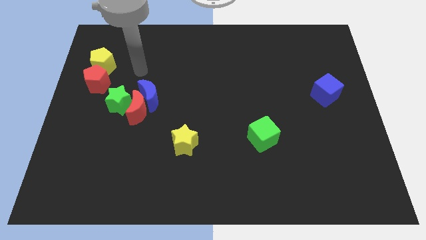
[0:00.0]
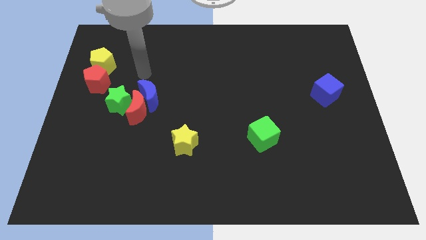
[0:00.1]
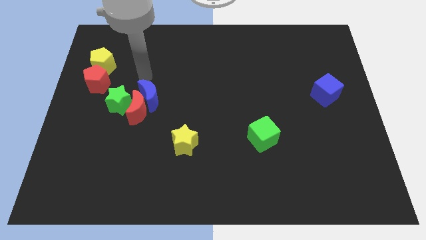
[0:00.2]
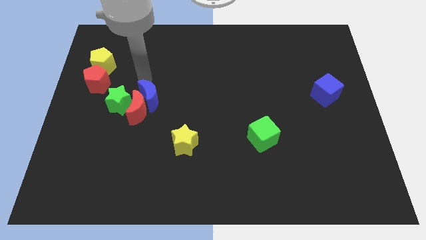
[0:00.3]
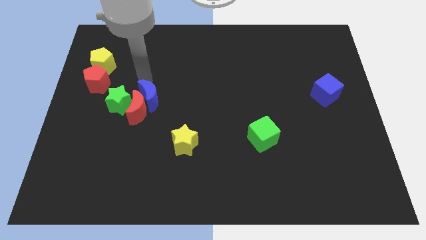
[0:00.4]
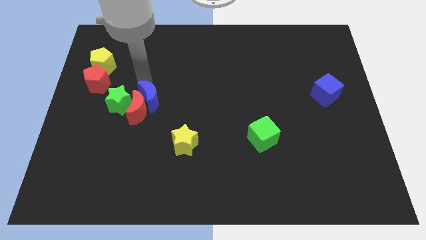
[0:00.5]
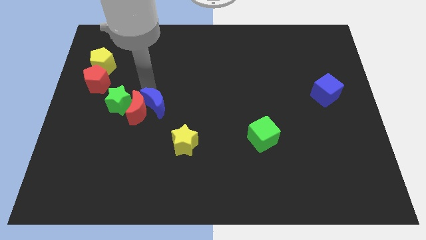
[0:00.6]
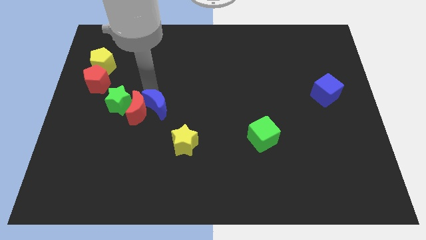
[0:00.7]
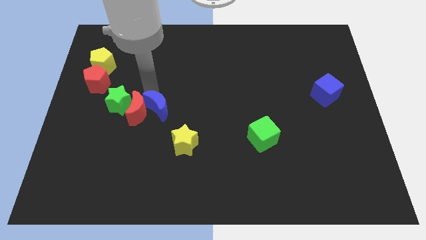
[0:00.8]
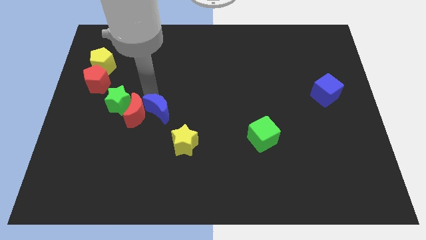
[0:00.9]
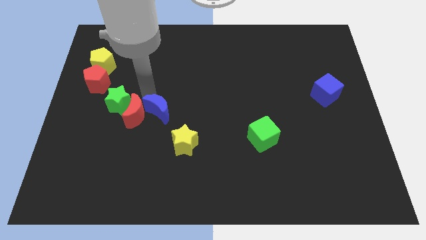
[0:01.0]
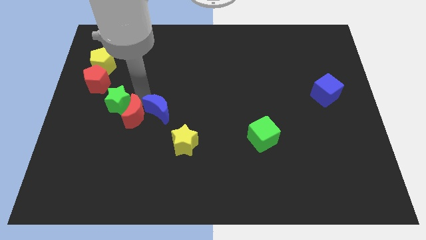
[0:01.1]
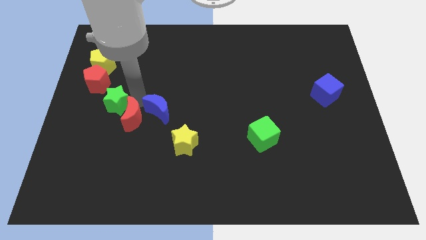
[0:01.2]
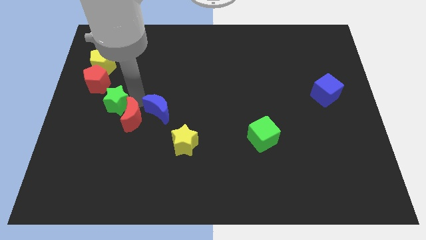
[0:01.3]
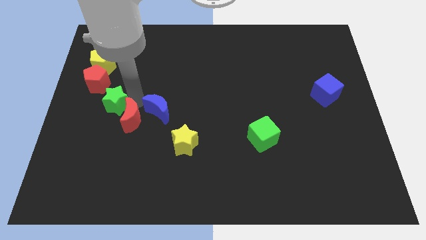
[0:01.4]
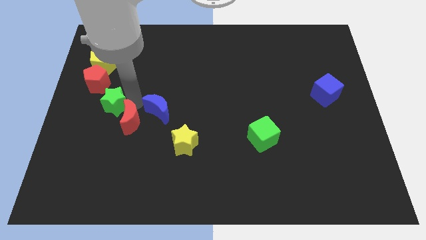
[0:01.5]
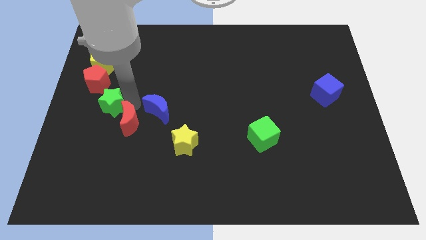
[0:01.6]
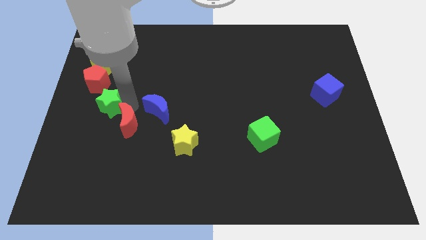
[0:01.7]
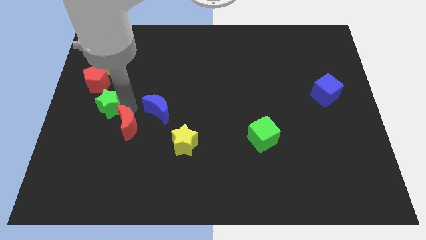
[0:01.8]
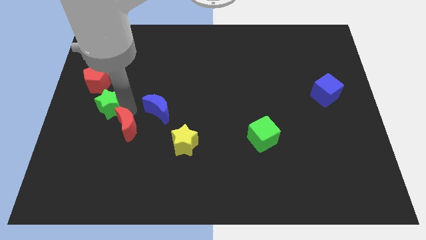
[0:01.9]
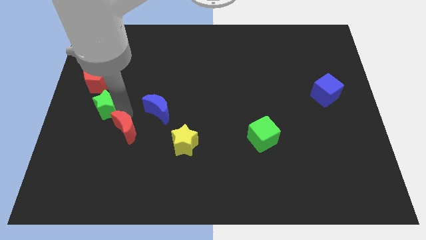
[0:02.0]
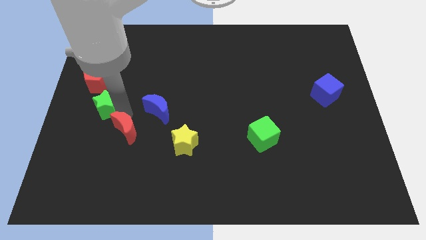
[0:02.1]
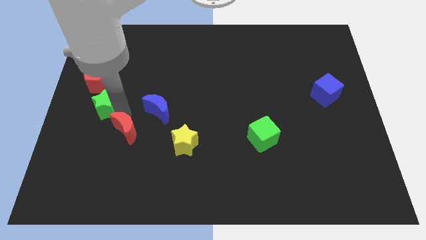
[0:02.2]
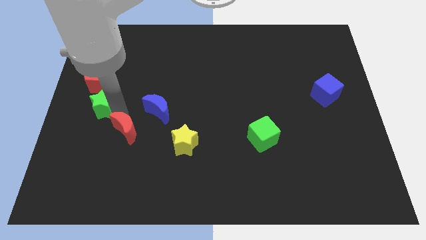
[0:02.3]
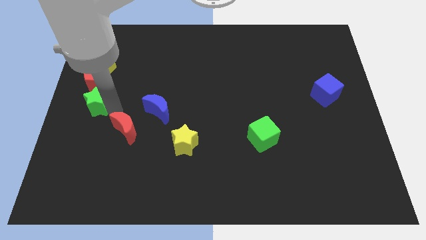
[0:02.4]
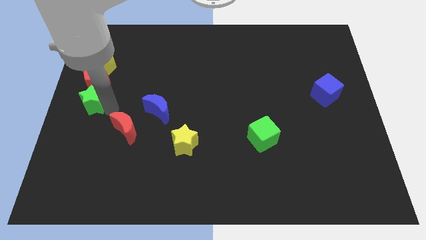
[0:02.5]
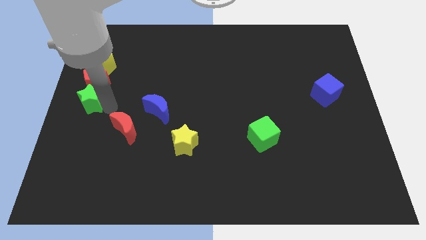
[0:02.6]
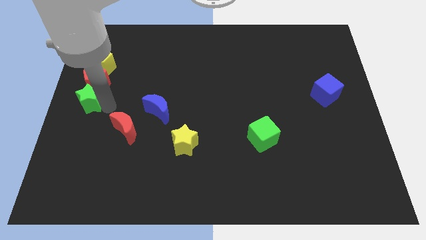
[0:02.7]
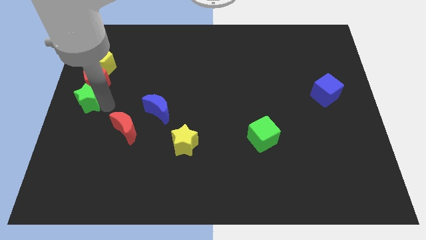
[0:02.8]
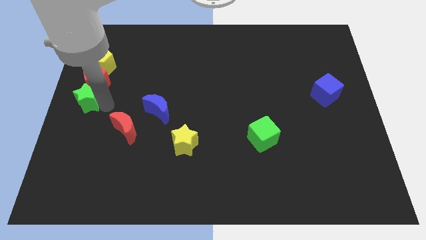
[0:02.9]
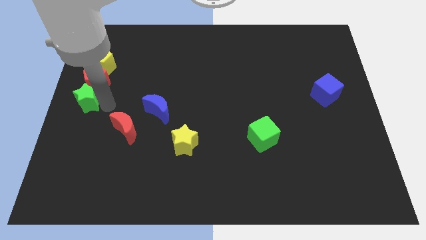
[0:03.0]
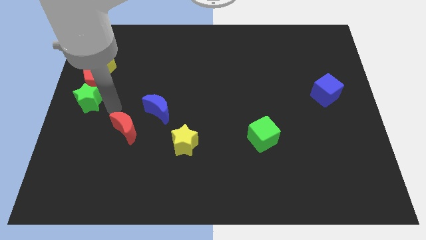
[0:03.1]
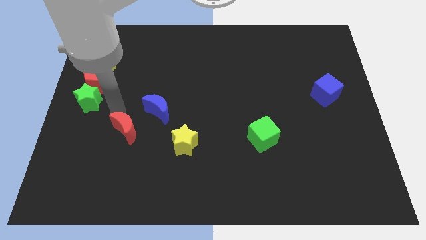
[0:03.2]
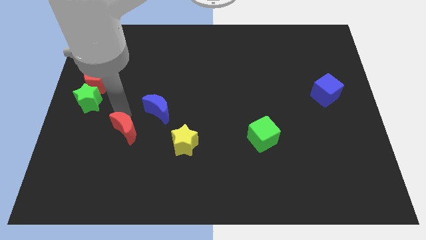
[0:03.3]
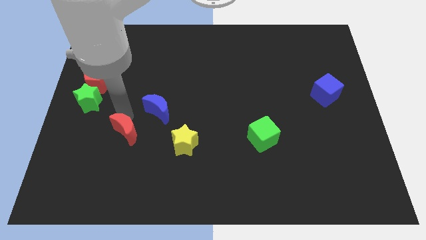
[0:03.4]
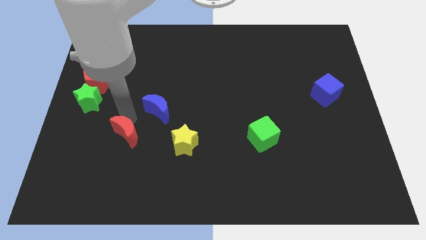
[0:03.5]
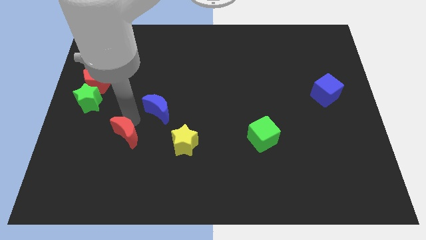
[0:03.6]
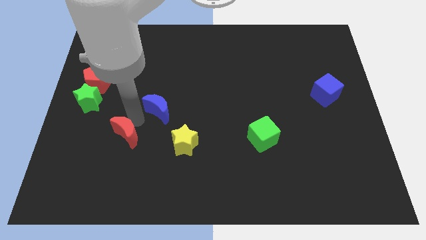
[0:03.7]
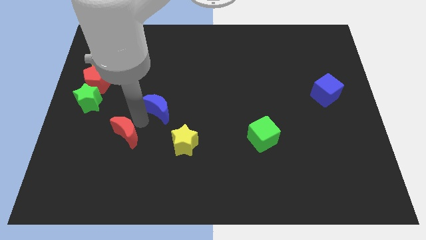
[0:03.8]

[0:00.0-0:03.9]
place green star to the bottom of the red pentagon

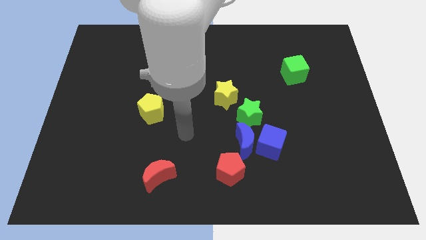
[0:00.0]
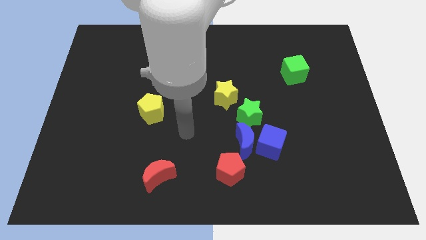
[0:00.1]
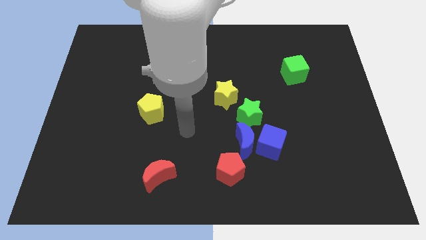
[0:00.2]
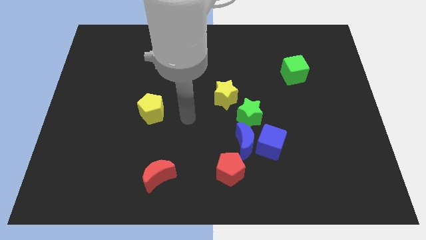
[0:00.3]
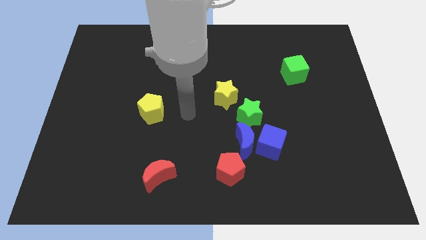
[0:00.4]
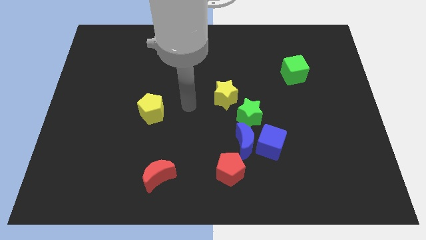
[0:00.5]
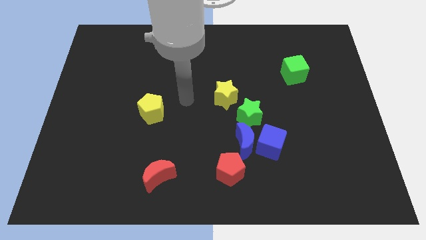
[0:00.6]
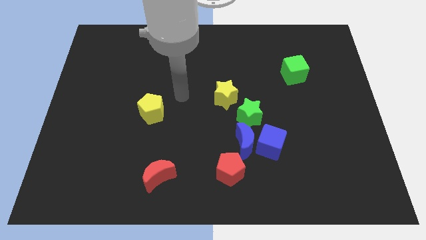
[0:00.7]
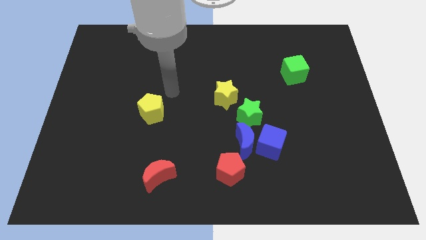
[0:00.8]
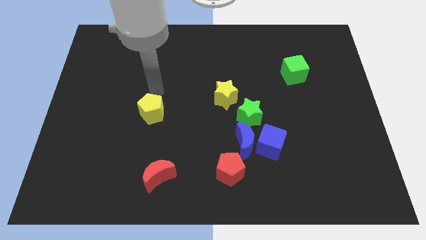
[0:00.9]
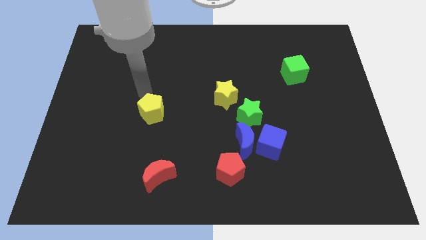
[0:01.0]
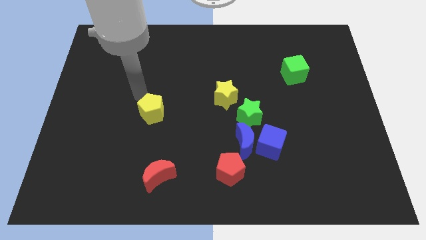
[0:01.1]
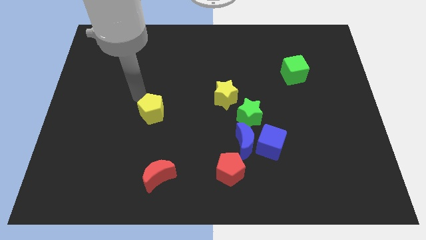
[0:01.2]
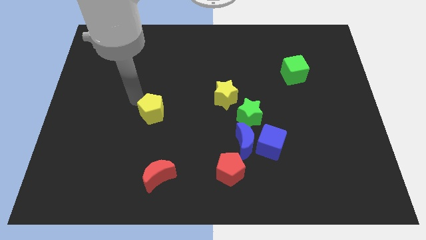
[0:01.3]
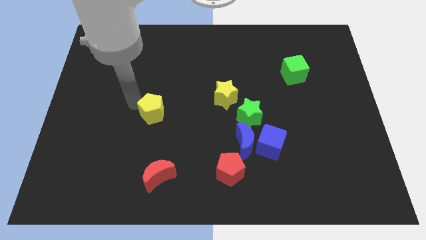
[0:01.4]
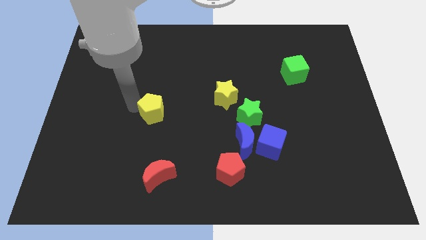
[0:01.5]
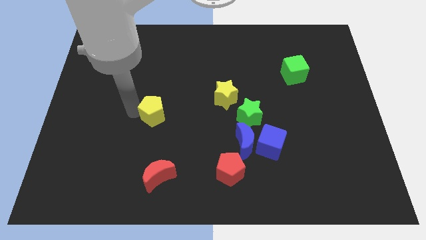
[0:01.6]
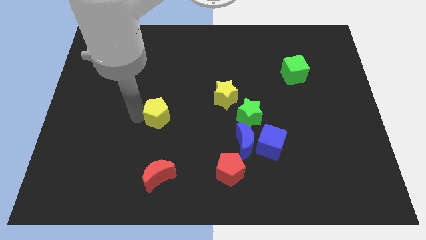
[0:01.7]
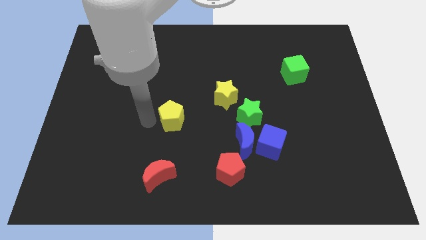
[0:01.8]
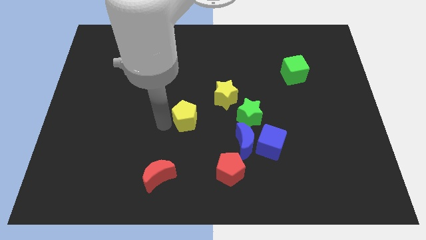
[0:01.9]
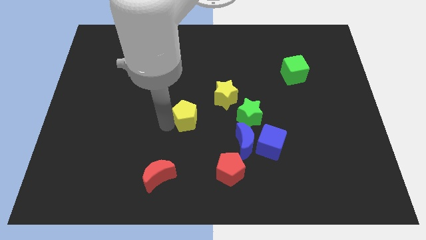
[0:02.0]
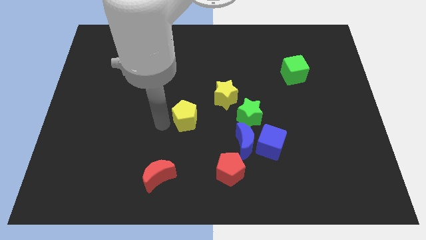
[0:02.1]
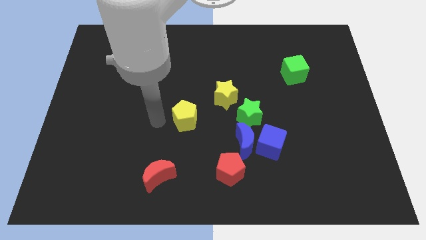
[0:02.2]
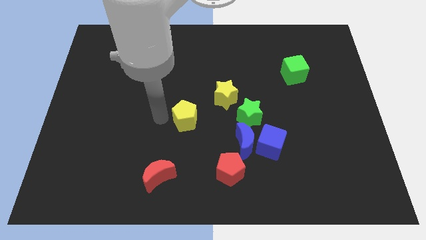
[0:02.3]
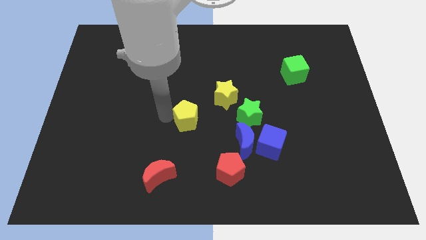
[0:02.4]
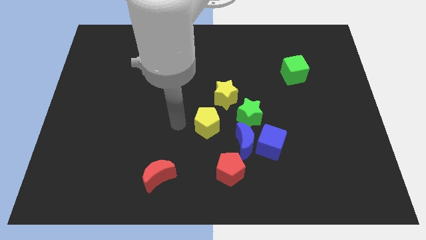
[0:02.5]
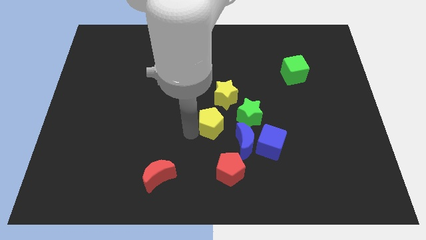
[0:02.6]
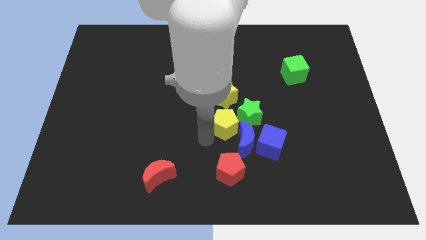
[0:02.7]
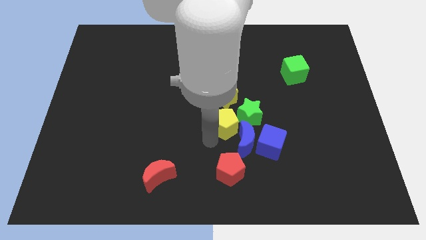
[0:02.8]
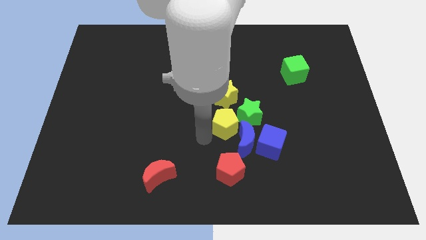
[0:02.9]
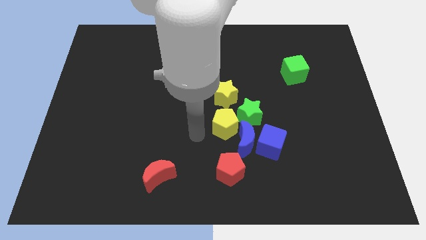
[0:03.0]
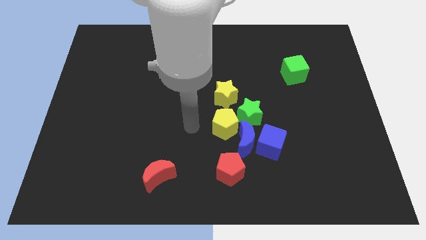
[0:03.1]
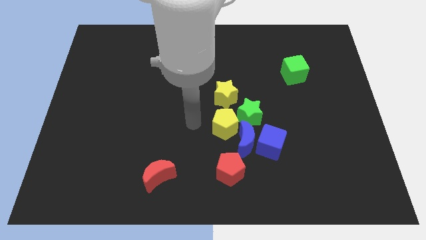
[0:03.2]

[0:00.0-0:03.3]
move the yellow pentagon to the center

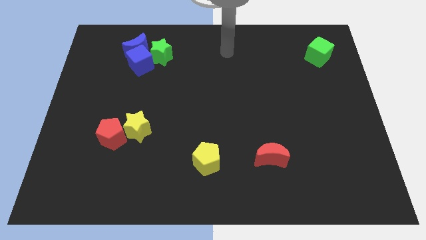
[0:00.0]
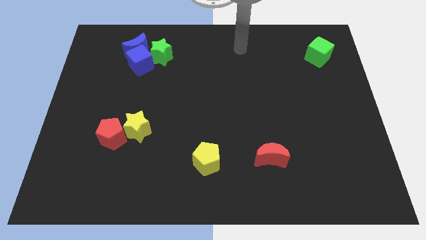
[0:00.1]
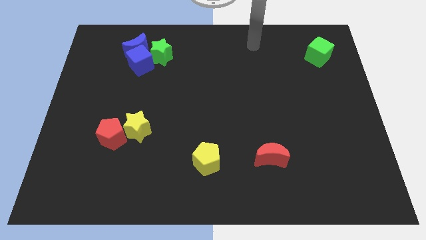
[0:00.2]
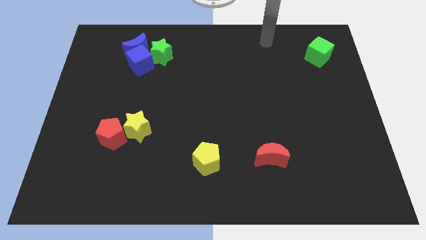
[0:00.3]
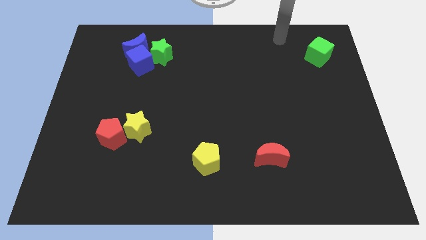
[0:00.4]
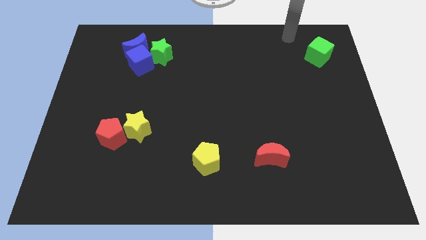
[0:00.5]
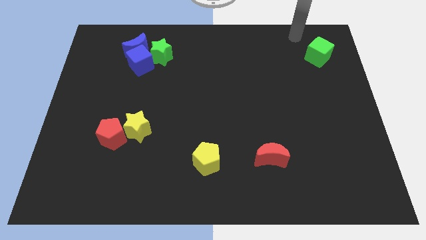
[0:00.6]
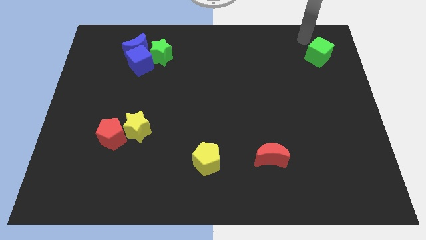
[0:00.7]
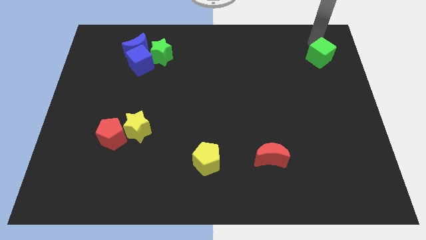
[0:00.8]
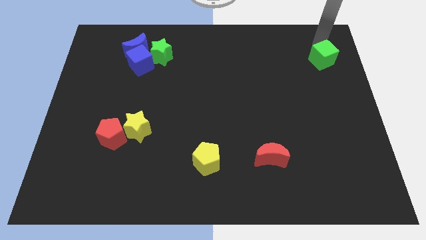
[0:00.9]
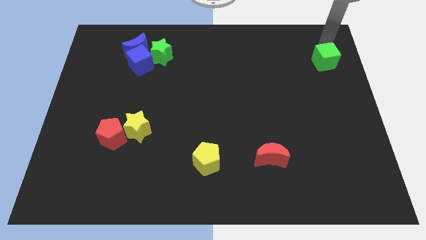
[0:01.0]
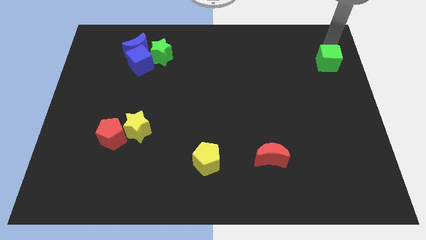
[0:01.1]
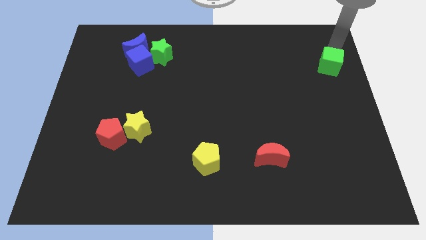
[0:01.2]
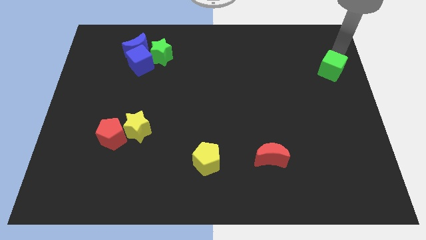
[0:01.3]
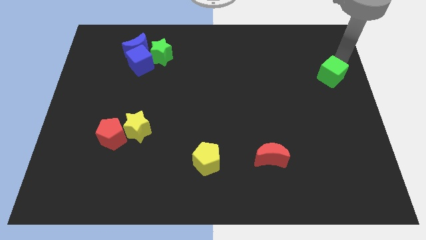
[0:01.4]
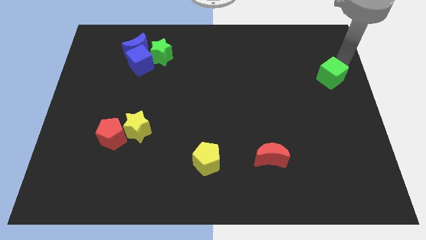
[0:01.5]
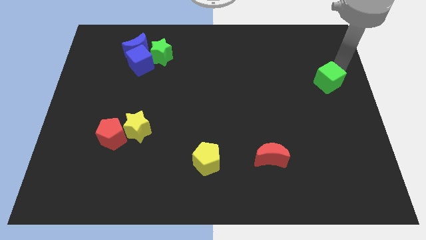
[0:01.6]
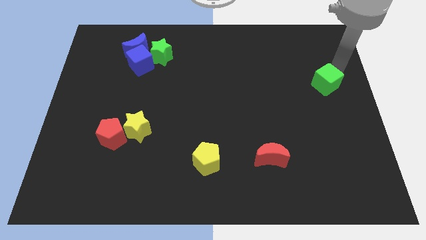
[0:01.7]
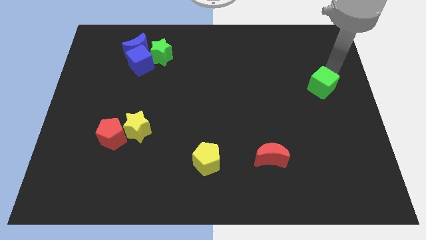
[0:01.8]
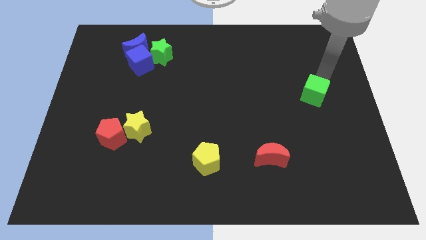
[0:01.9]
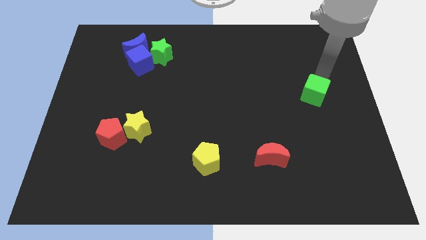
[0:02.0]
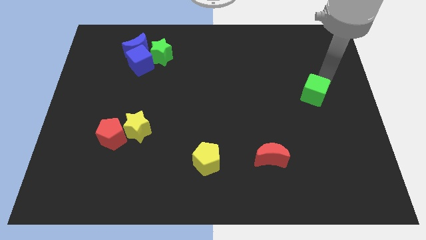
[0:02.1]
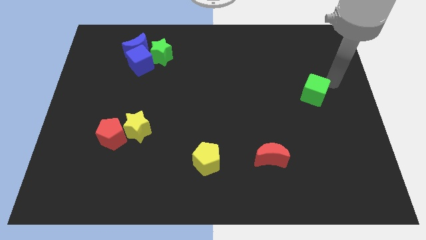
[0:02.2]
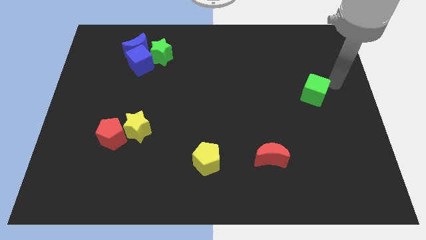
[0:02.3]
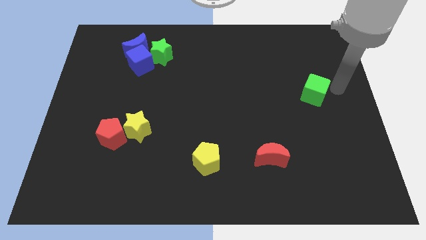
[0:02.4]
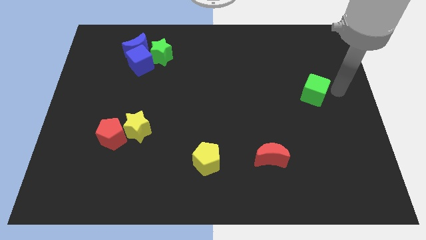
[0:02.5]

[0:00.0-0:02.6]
move the green cube downwards
